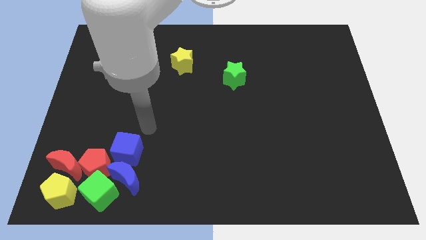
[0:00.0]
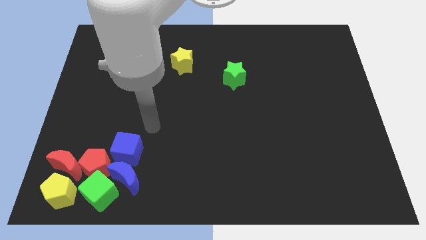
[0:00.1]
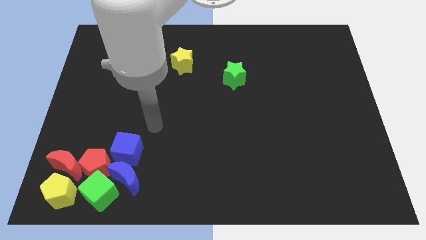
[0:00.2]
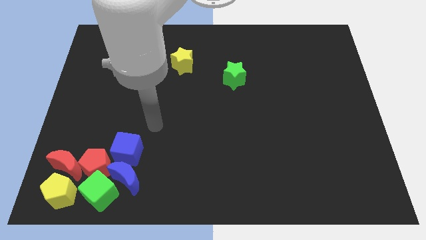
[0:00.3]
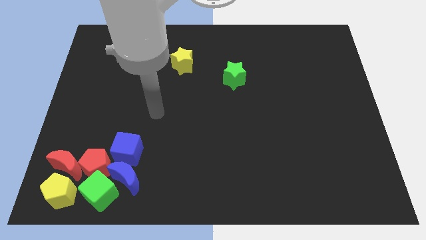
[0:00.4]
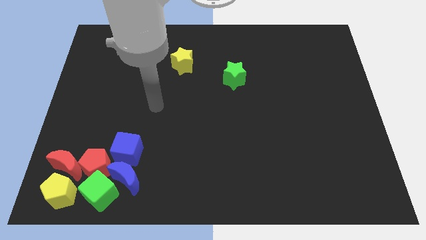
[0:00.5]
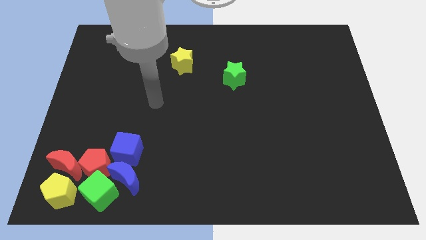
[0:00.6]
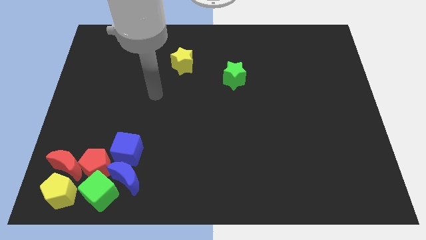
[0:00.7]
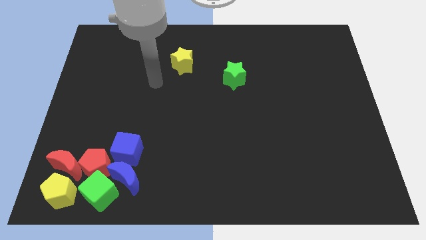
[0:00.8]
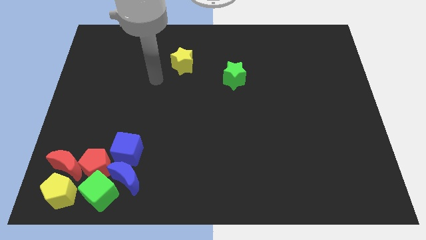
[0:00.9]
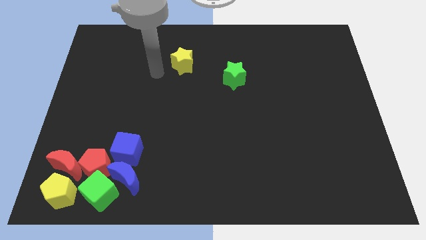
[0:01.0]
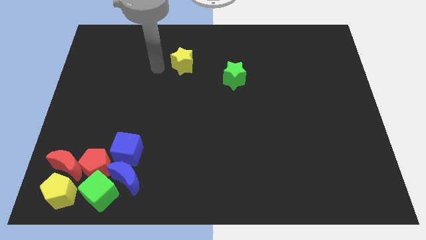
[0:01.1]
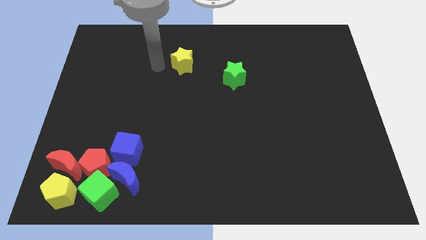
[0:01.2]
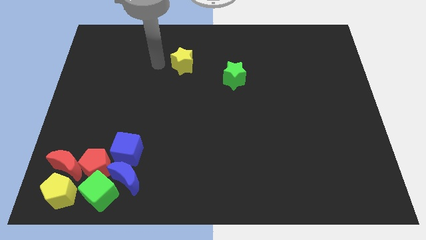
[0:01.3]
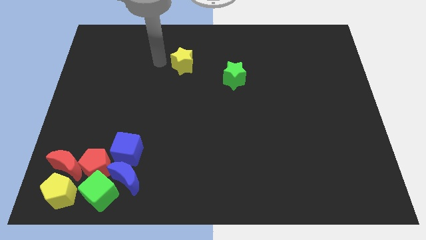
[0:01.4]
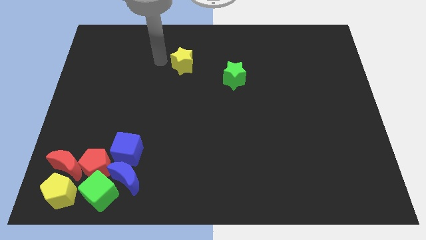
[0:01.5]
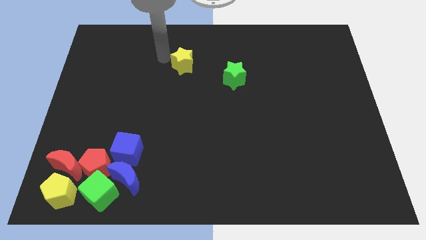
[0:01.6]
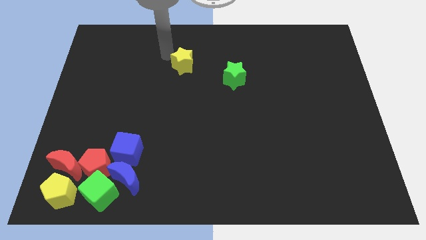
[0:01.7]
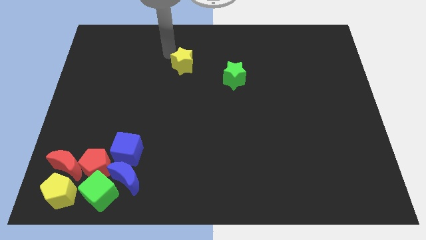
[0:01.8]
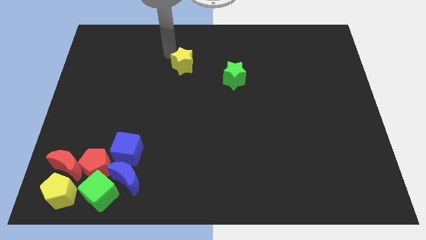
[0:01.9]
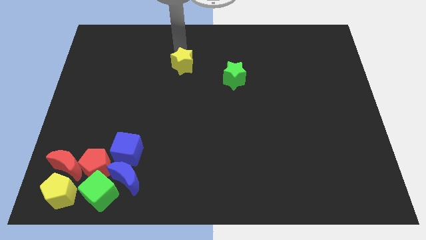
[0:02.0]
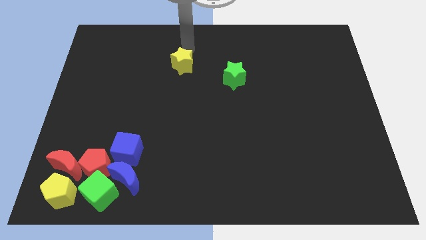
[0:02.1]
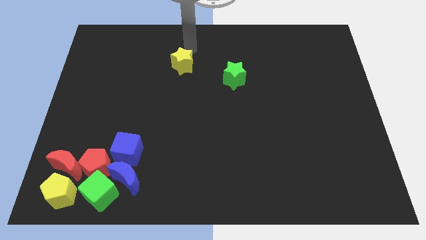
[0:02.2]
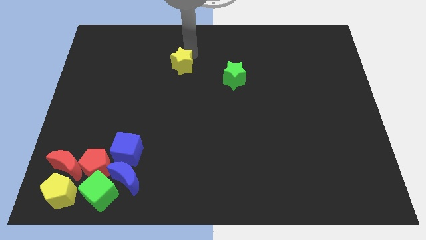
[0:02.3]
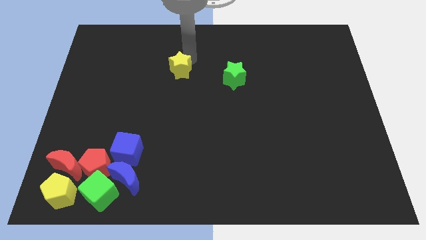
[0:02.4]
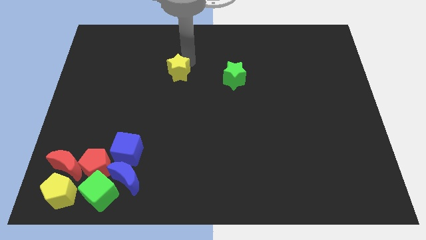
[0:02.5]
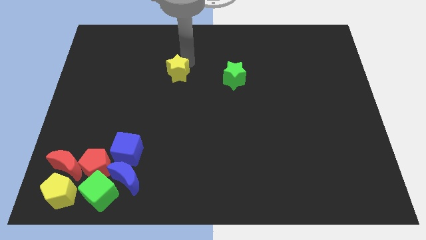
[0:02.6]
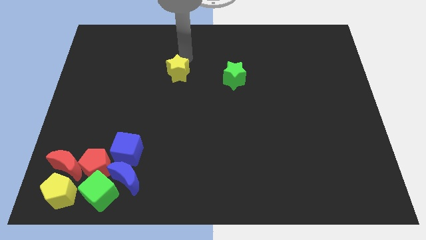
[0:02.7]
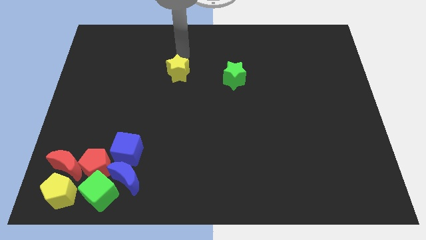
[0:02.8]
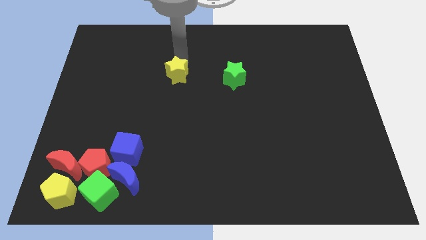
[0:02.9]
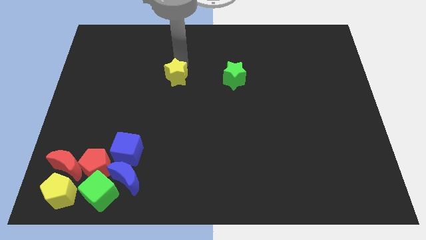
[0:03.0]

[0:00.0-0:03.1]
move the yellow star parallel to the left of the green star

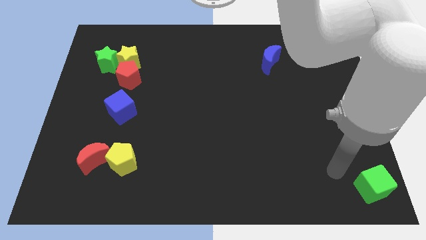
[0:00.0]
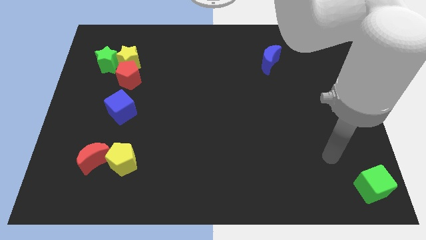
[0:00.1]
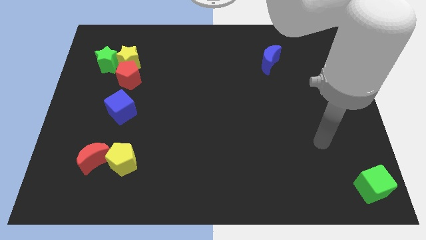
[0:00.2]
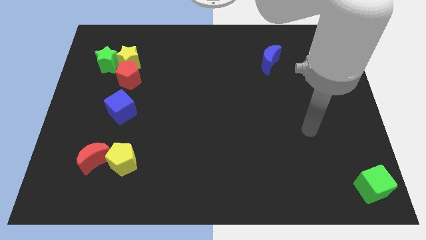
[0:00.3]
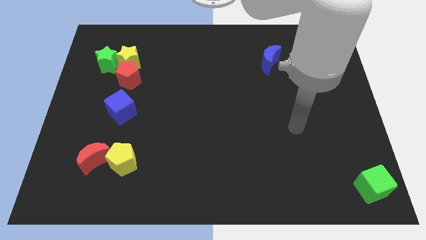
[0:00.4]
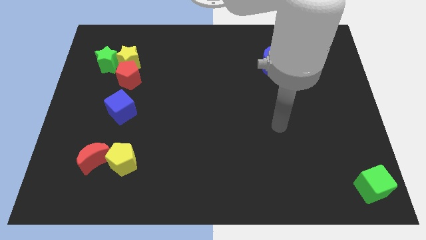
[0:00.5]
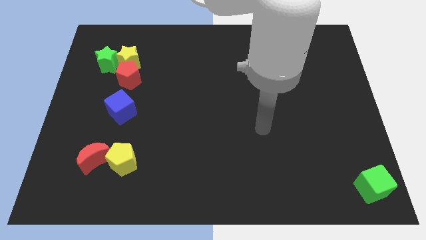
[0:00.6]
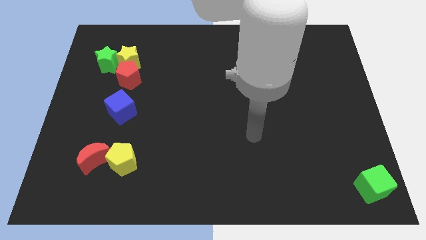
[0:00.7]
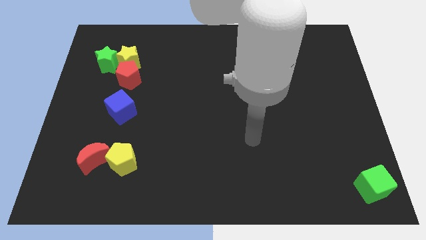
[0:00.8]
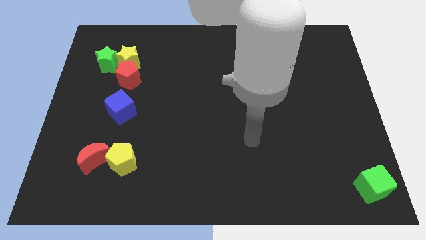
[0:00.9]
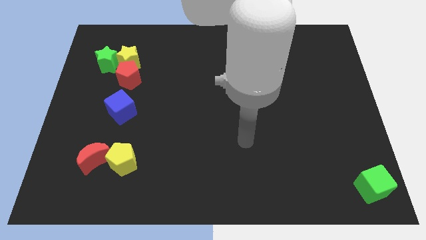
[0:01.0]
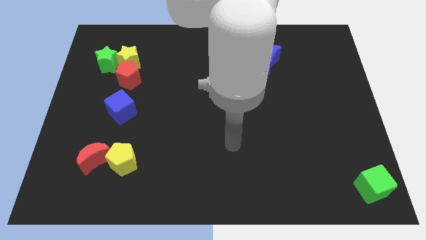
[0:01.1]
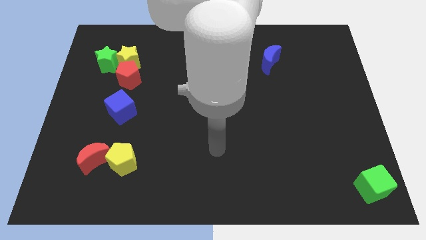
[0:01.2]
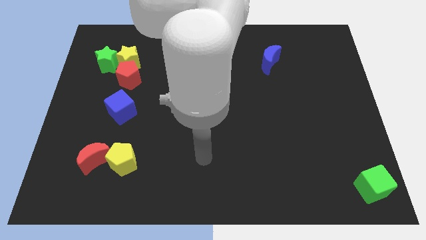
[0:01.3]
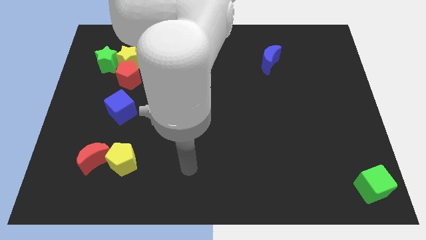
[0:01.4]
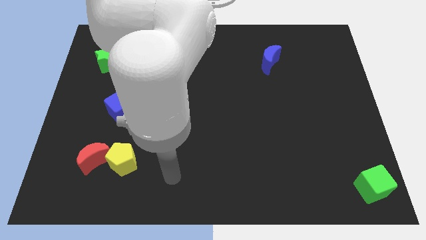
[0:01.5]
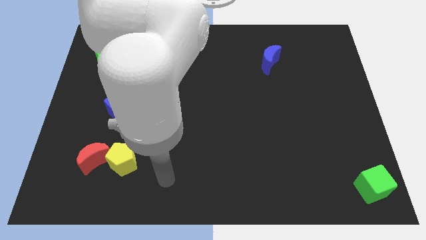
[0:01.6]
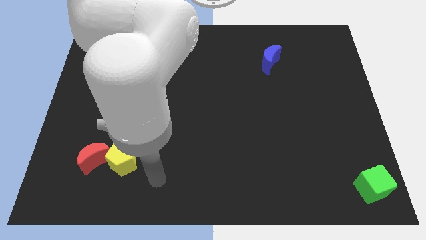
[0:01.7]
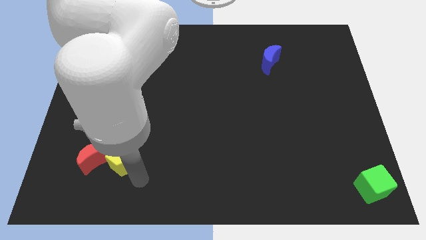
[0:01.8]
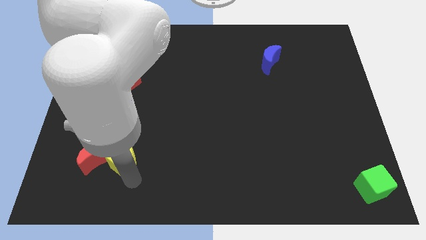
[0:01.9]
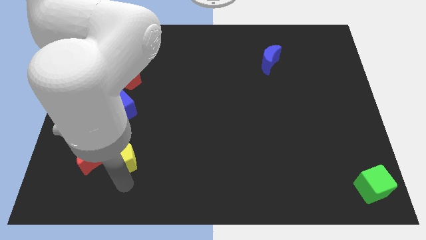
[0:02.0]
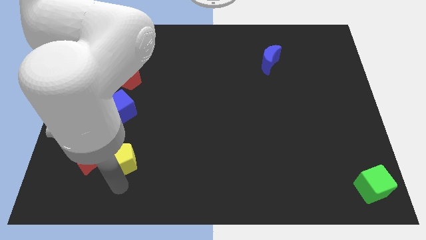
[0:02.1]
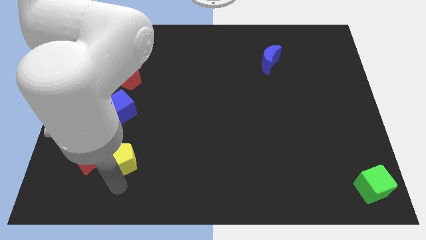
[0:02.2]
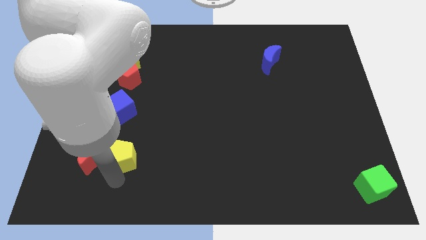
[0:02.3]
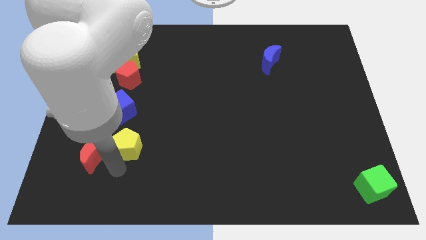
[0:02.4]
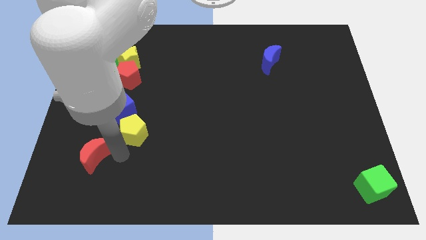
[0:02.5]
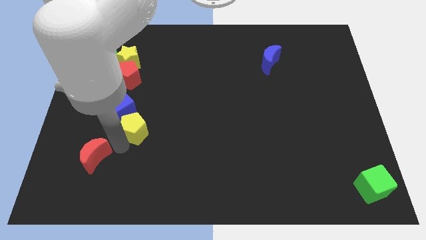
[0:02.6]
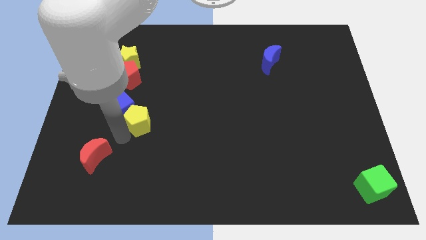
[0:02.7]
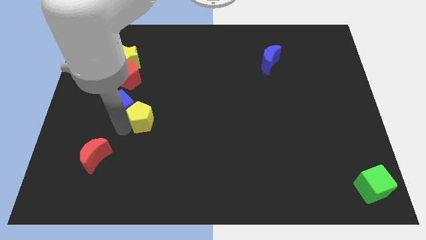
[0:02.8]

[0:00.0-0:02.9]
move the yellow pentagon up slightly

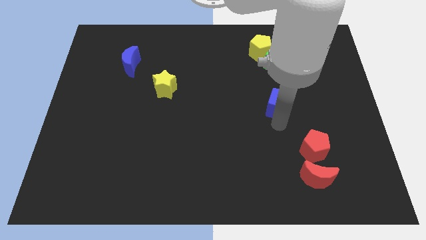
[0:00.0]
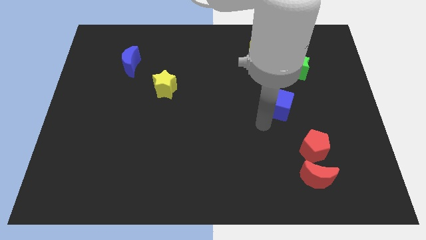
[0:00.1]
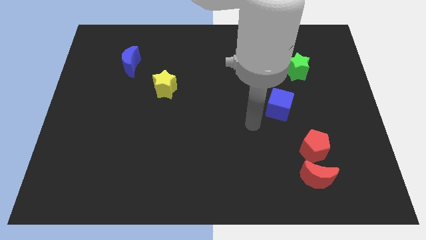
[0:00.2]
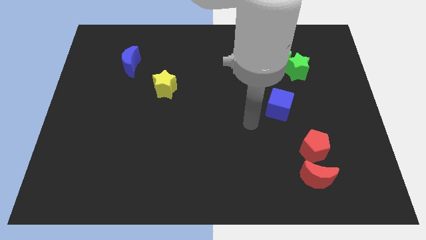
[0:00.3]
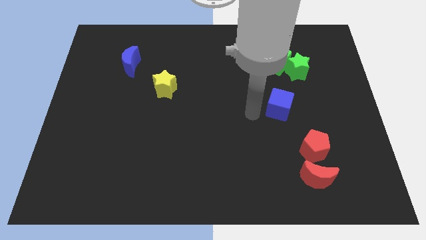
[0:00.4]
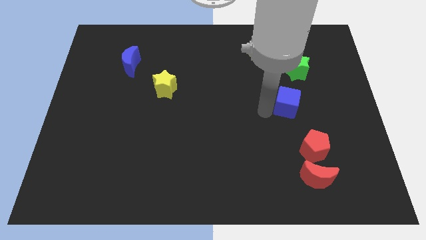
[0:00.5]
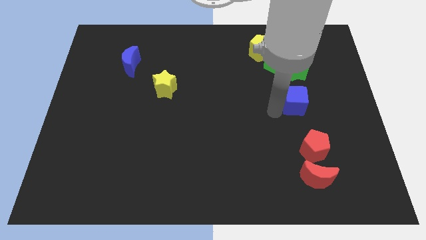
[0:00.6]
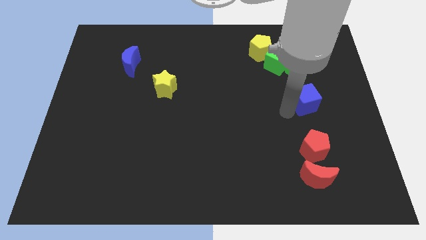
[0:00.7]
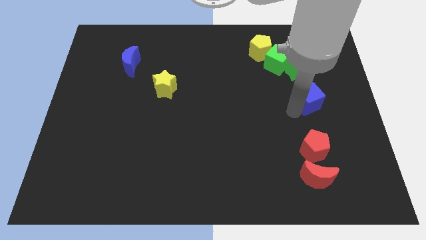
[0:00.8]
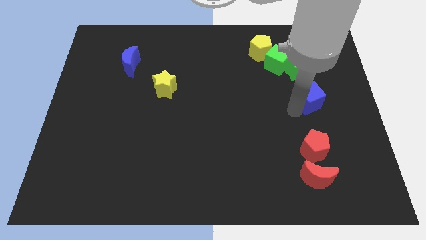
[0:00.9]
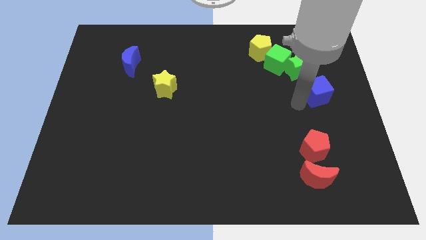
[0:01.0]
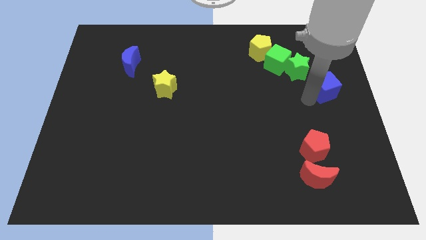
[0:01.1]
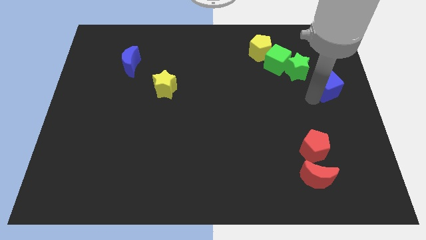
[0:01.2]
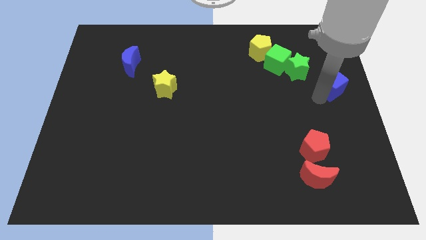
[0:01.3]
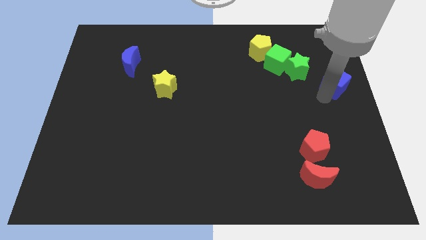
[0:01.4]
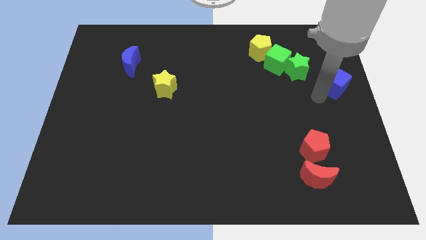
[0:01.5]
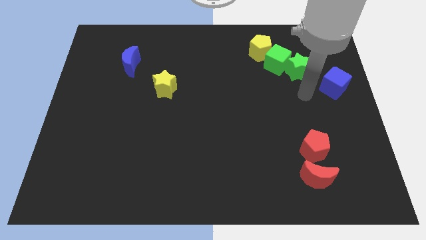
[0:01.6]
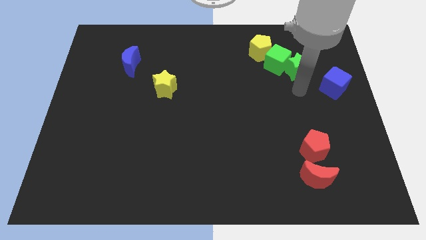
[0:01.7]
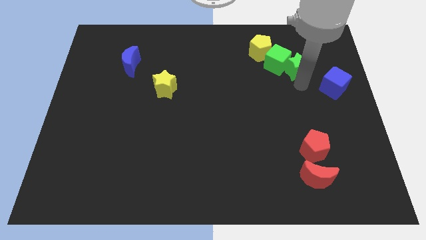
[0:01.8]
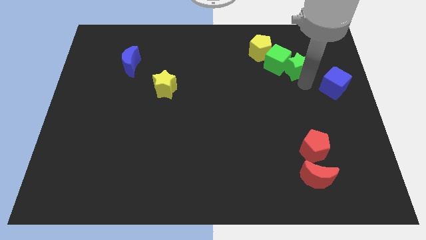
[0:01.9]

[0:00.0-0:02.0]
push the blue cube to the right side of the green star

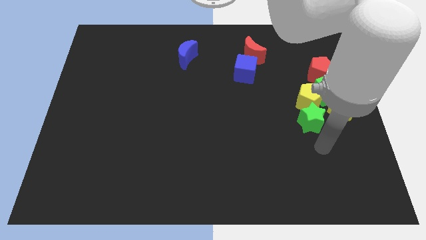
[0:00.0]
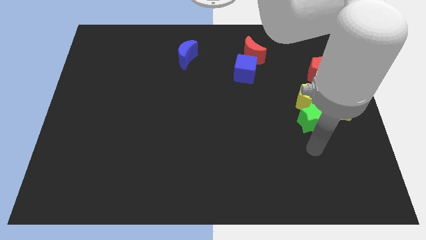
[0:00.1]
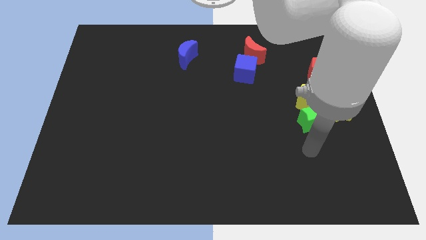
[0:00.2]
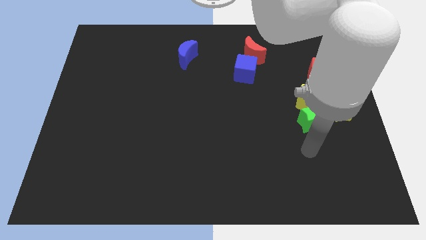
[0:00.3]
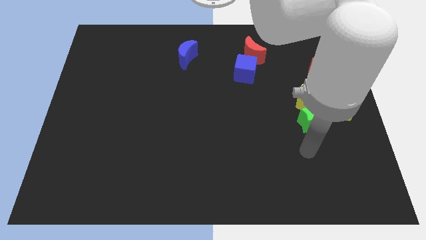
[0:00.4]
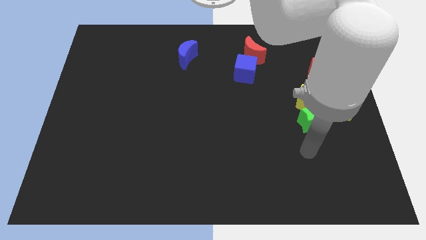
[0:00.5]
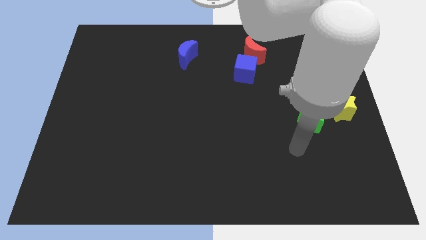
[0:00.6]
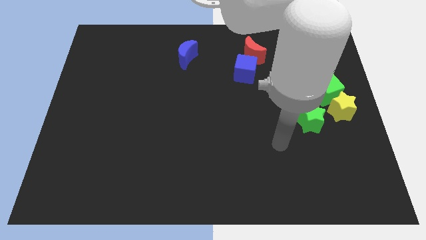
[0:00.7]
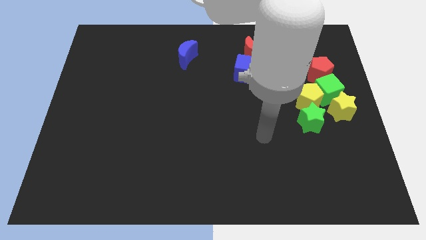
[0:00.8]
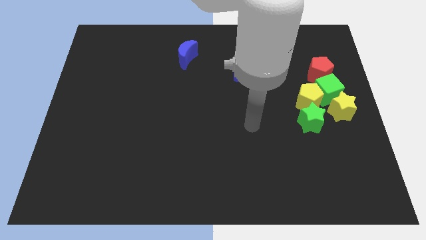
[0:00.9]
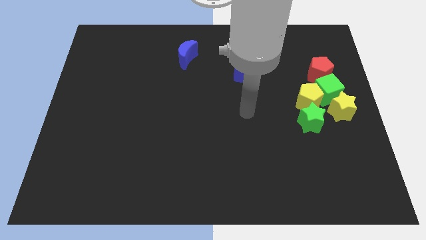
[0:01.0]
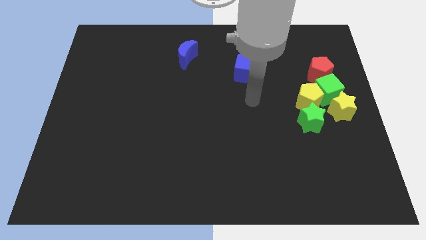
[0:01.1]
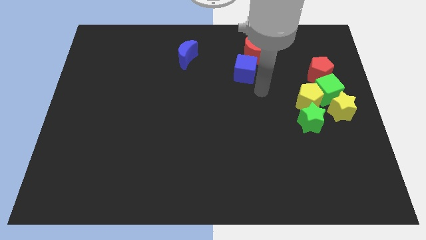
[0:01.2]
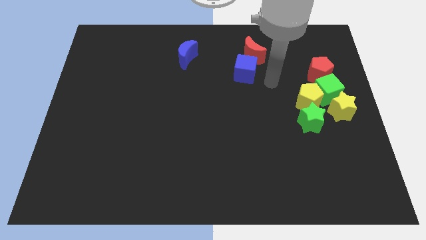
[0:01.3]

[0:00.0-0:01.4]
point your arm at the right side of the blue cube
